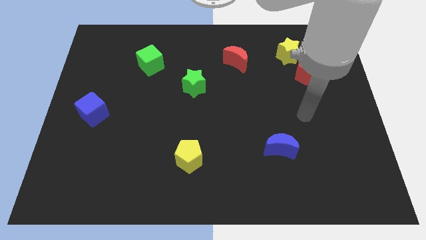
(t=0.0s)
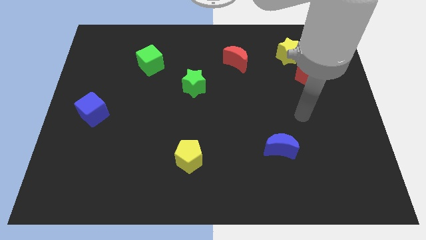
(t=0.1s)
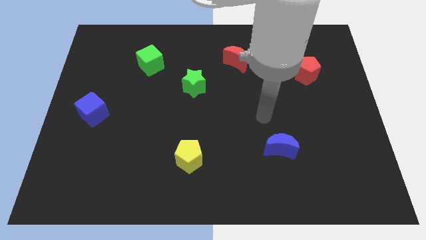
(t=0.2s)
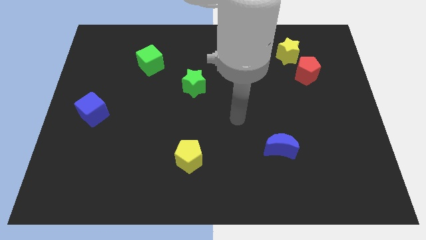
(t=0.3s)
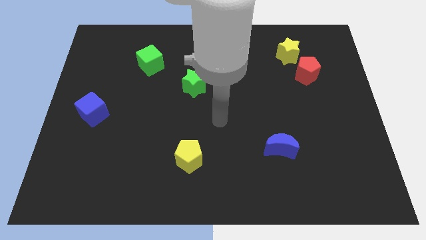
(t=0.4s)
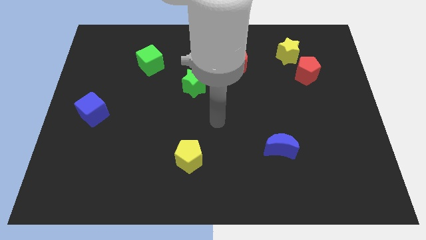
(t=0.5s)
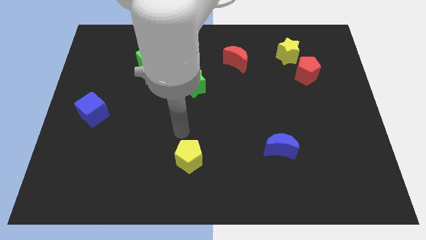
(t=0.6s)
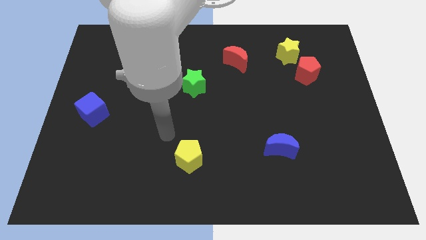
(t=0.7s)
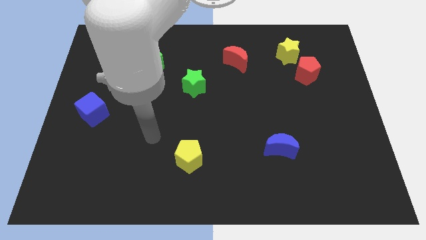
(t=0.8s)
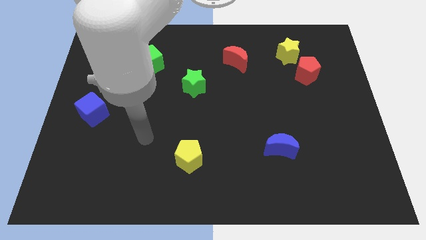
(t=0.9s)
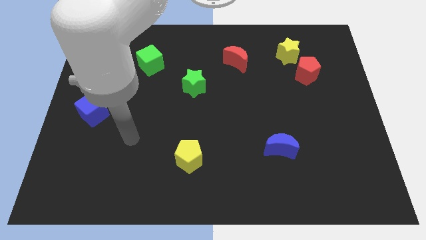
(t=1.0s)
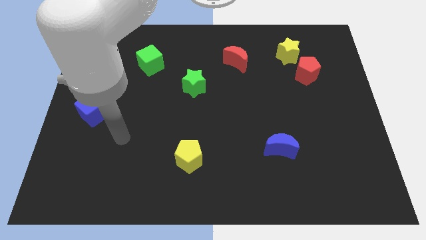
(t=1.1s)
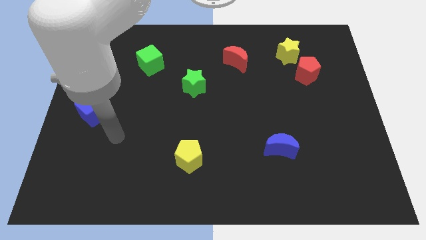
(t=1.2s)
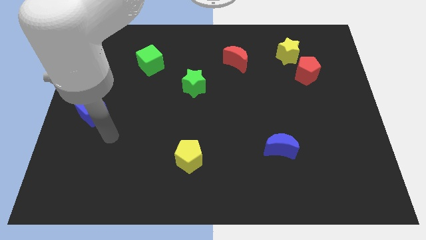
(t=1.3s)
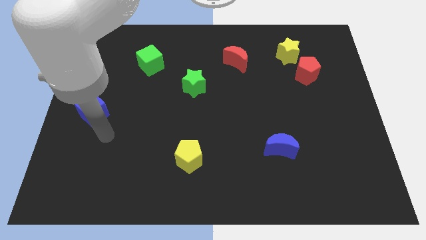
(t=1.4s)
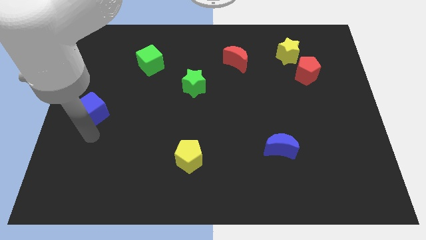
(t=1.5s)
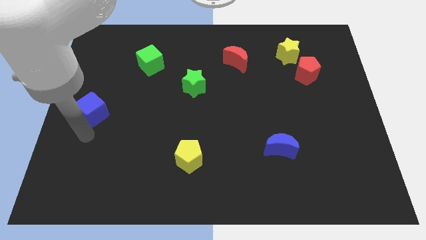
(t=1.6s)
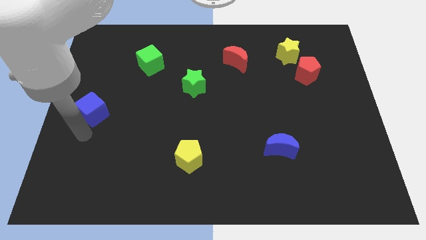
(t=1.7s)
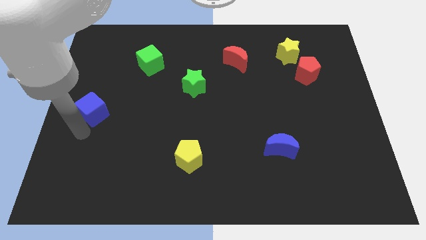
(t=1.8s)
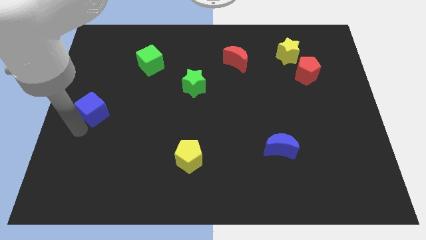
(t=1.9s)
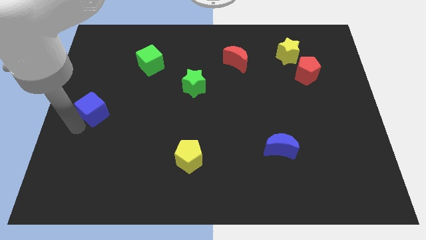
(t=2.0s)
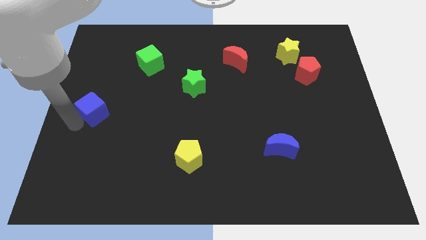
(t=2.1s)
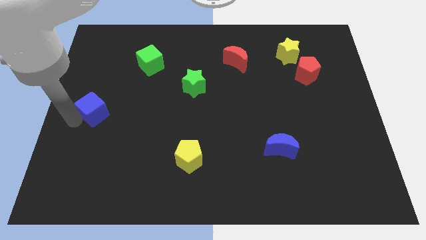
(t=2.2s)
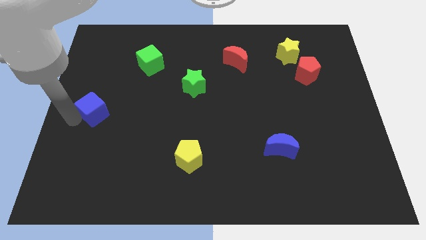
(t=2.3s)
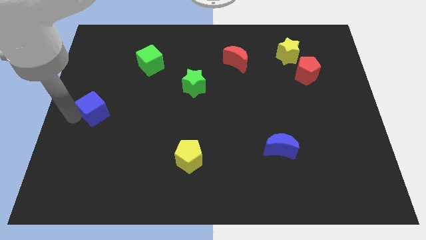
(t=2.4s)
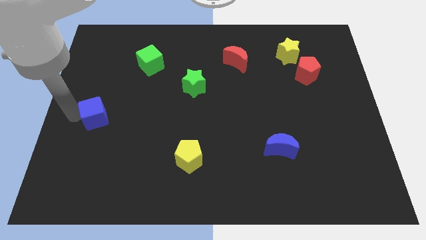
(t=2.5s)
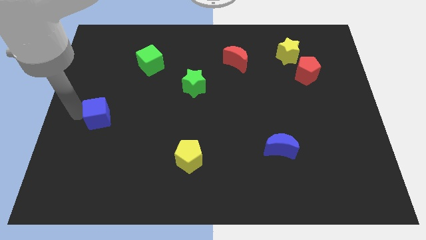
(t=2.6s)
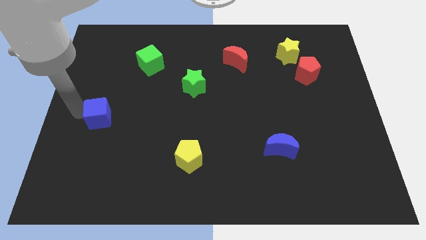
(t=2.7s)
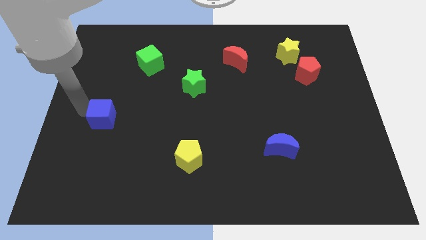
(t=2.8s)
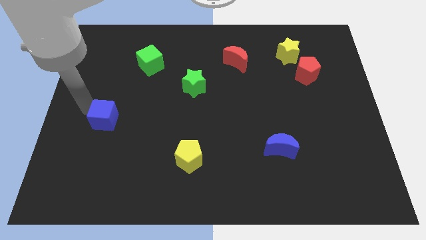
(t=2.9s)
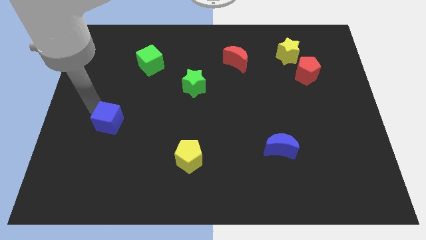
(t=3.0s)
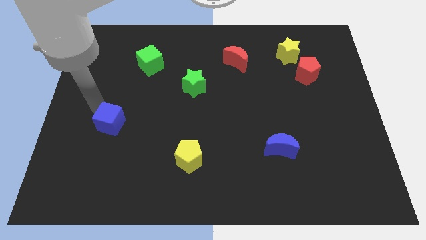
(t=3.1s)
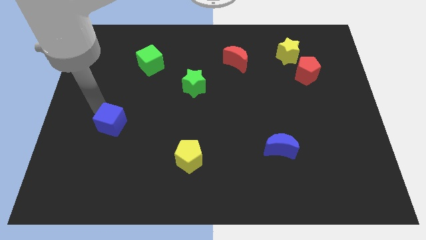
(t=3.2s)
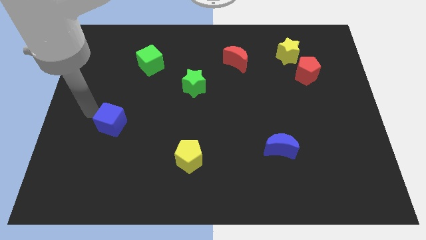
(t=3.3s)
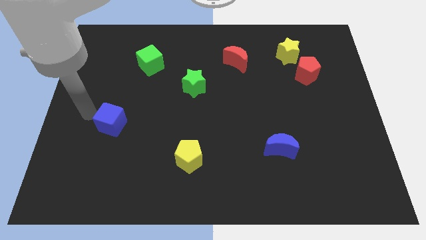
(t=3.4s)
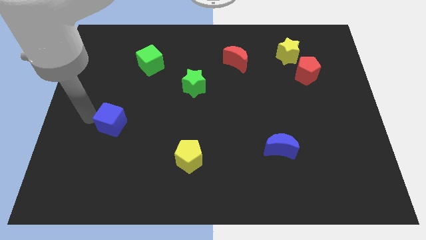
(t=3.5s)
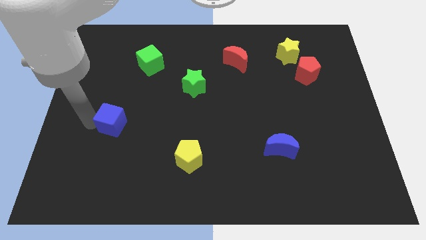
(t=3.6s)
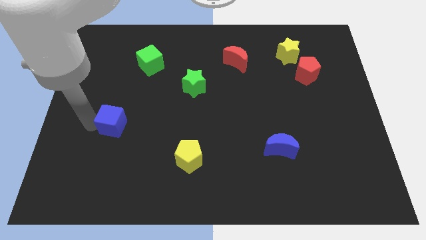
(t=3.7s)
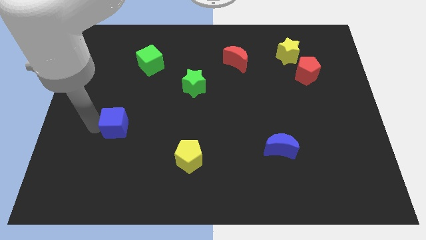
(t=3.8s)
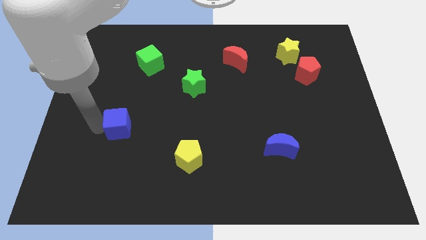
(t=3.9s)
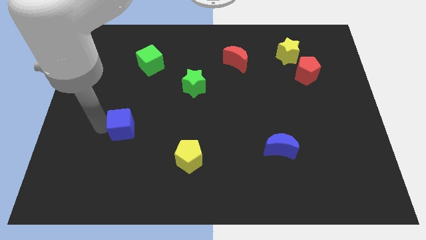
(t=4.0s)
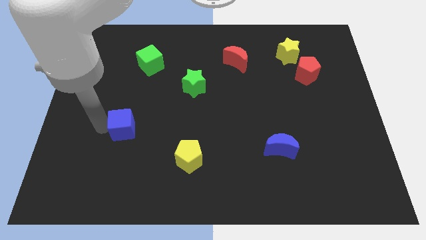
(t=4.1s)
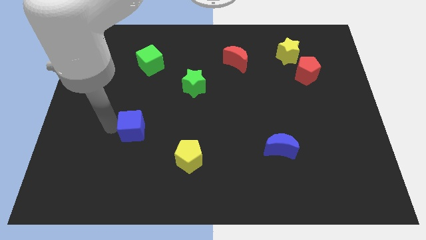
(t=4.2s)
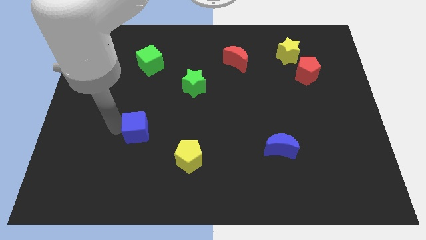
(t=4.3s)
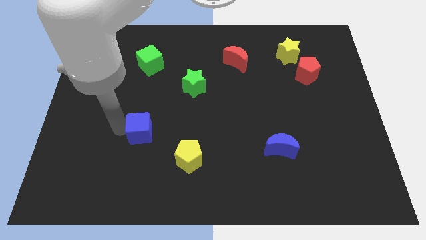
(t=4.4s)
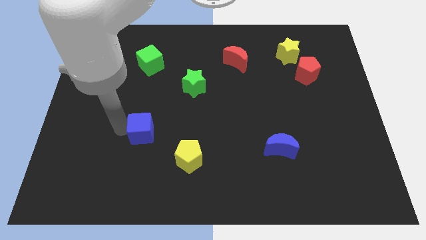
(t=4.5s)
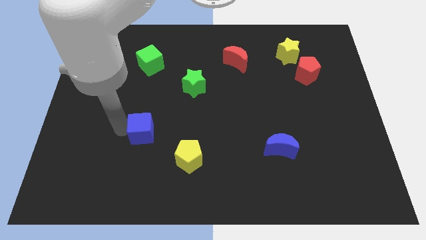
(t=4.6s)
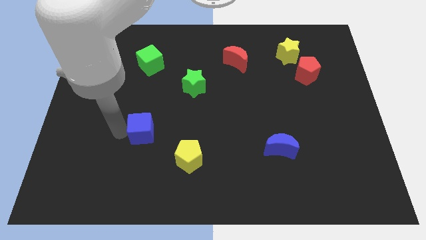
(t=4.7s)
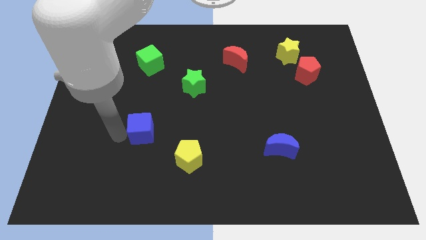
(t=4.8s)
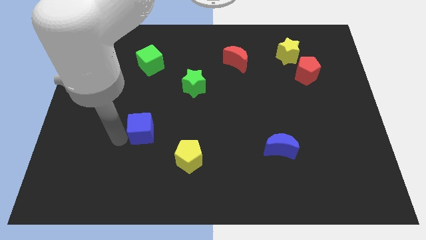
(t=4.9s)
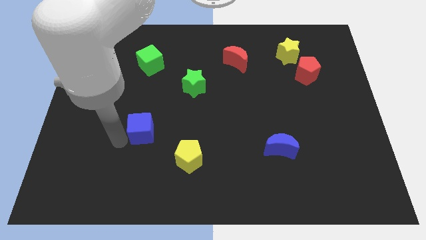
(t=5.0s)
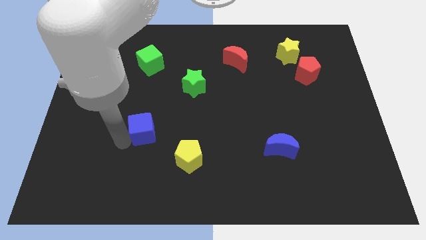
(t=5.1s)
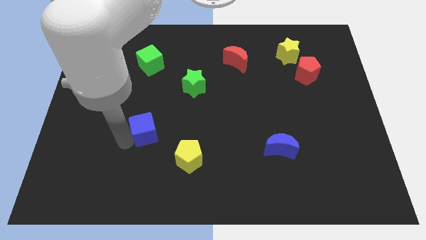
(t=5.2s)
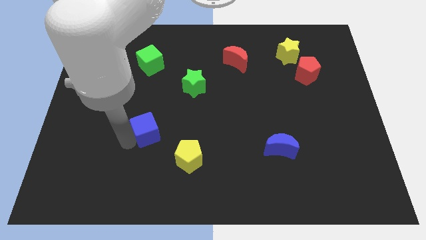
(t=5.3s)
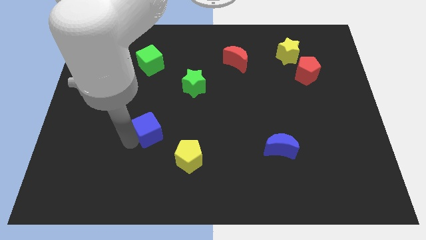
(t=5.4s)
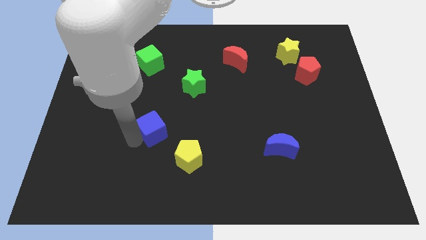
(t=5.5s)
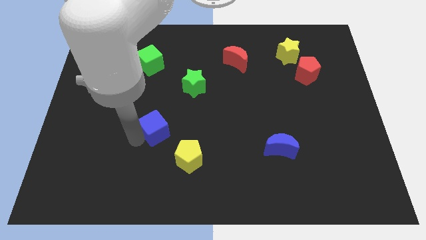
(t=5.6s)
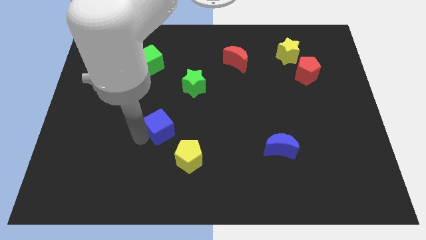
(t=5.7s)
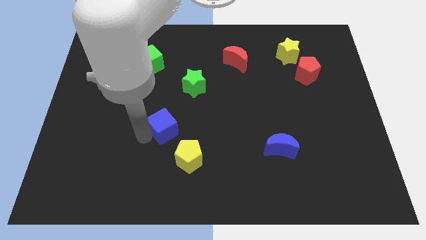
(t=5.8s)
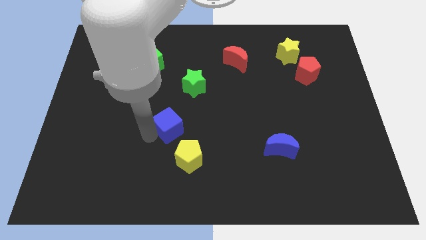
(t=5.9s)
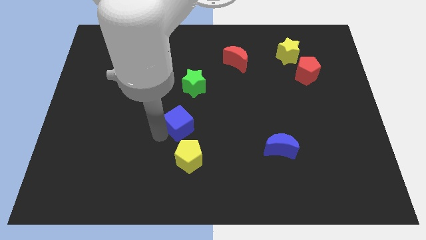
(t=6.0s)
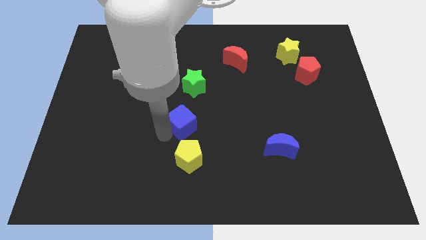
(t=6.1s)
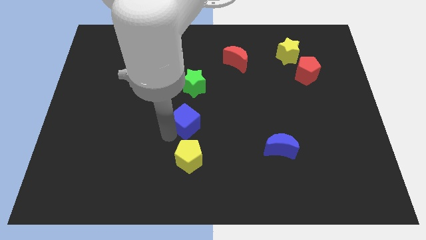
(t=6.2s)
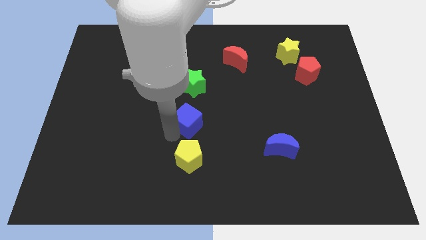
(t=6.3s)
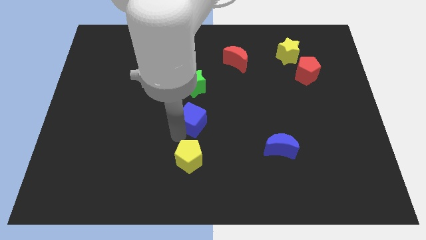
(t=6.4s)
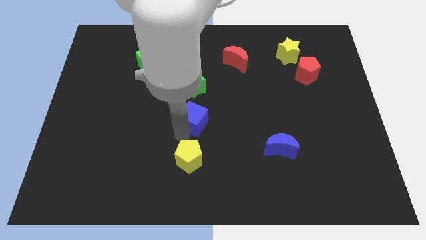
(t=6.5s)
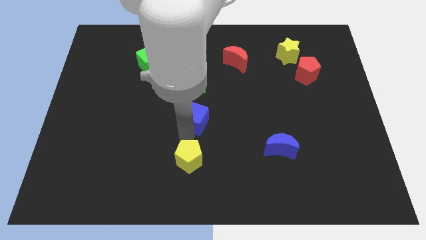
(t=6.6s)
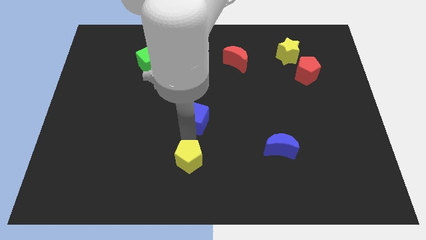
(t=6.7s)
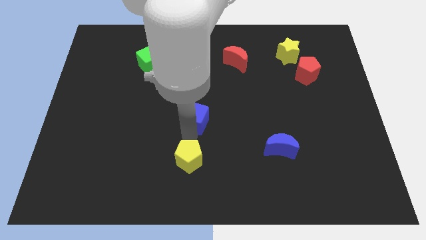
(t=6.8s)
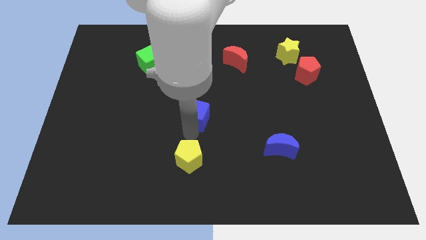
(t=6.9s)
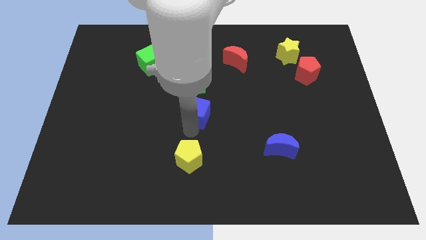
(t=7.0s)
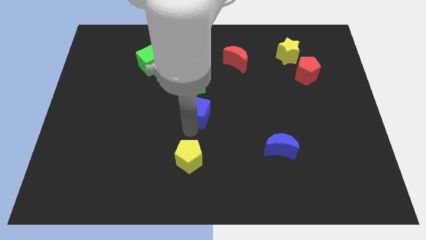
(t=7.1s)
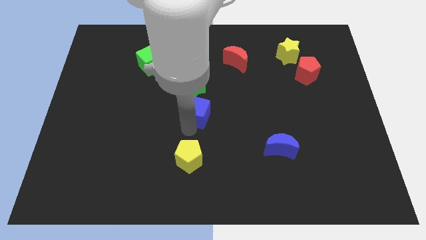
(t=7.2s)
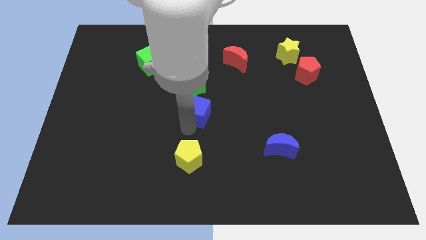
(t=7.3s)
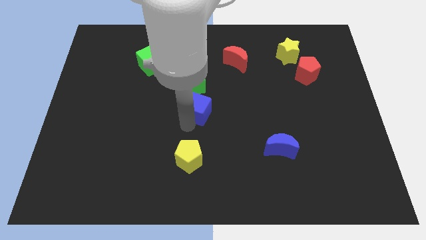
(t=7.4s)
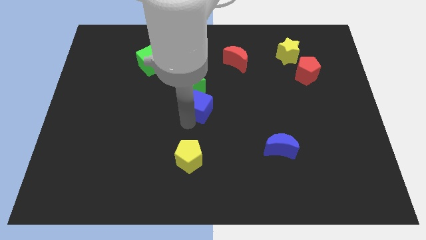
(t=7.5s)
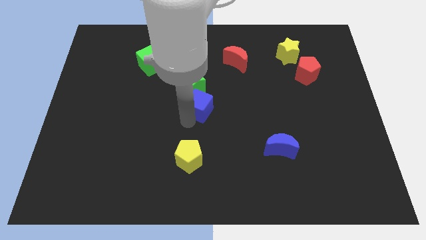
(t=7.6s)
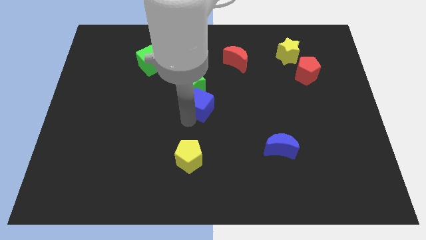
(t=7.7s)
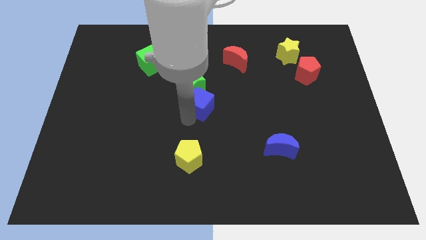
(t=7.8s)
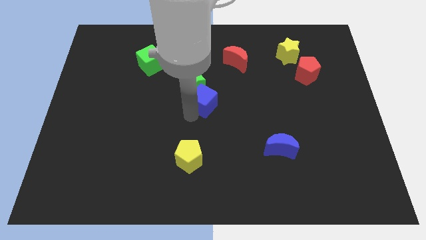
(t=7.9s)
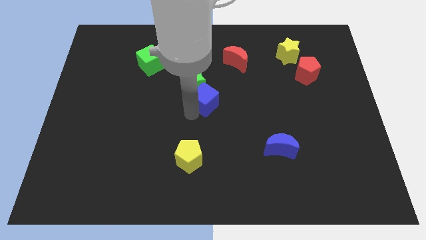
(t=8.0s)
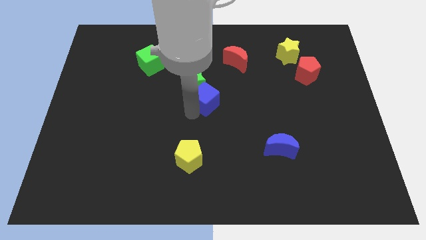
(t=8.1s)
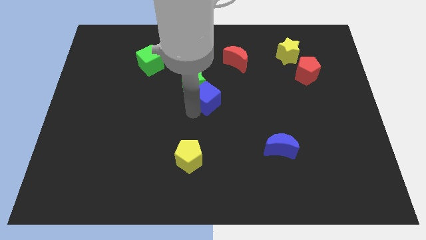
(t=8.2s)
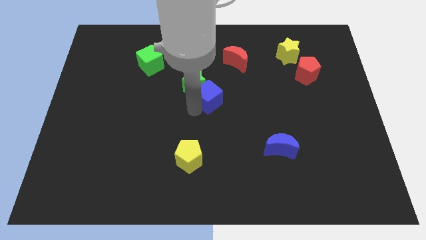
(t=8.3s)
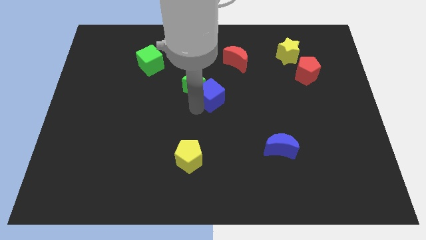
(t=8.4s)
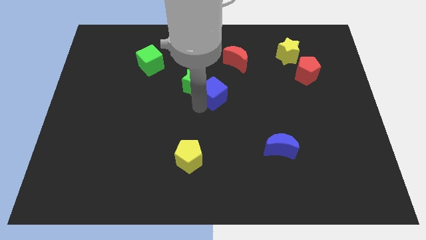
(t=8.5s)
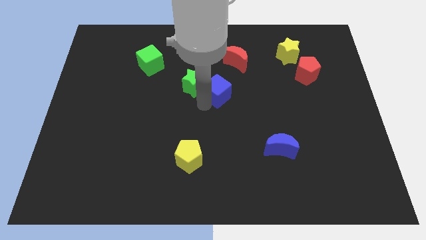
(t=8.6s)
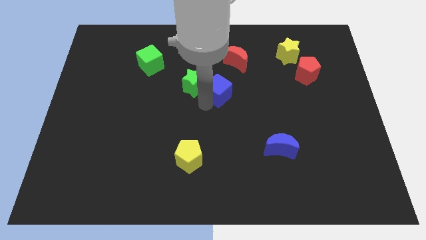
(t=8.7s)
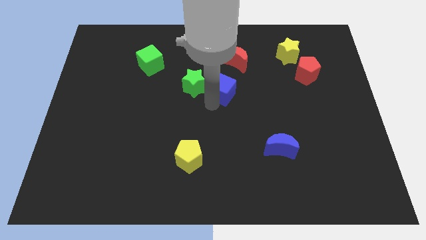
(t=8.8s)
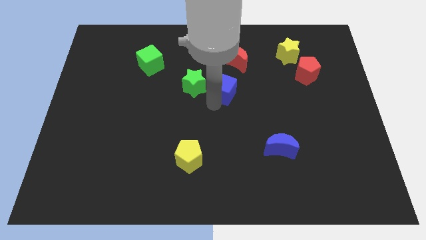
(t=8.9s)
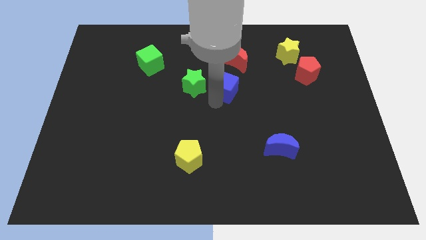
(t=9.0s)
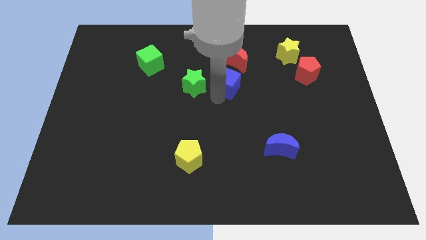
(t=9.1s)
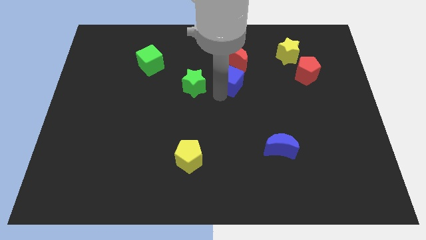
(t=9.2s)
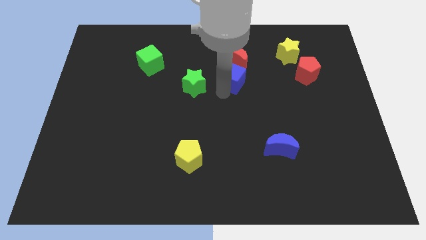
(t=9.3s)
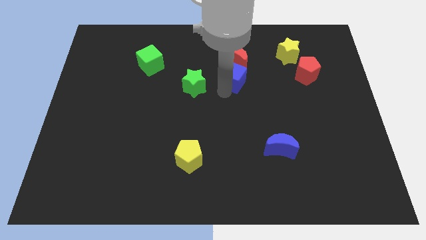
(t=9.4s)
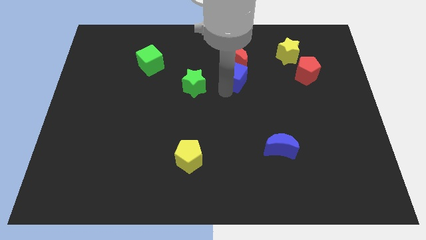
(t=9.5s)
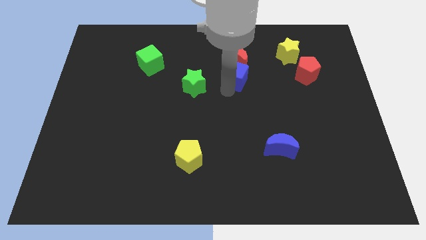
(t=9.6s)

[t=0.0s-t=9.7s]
put the blue cube close to the red moon
